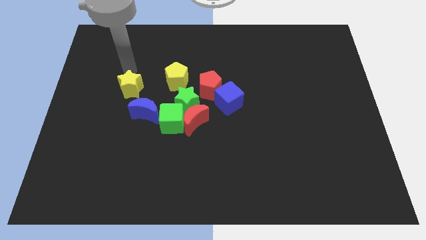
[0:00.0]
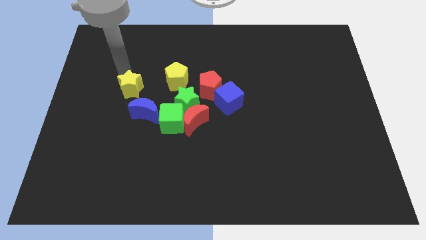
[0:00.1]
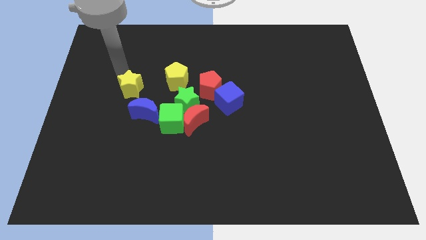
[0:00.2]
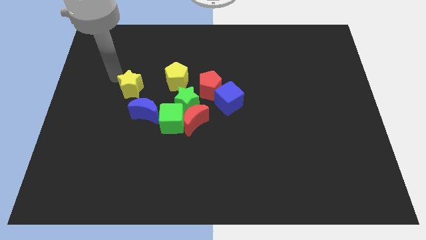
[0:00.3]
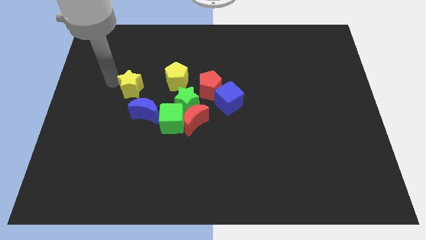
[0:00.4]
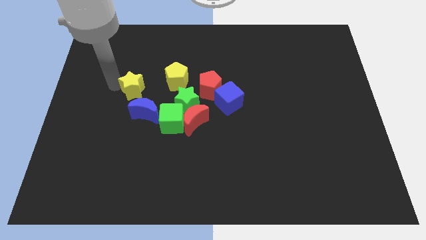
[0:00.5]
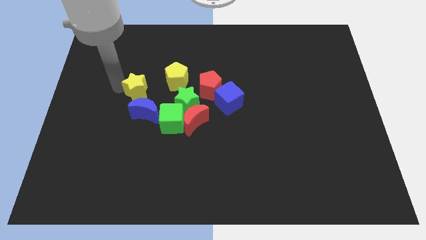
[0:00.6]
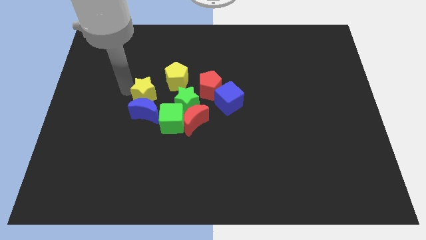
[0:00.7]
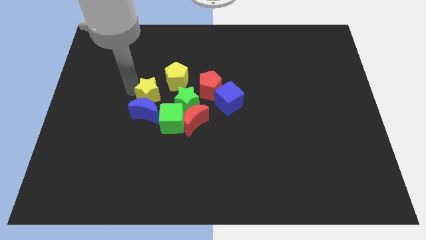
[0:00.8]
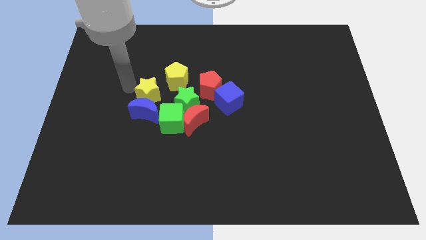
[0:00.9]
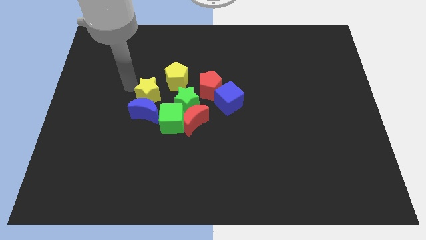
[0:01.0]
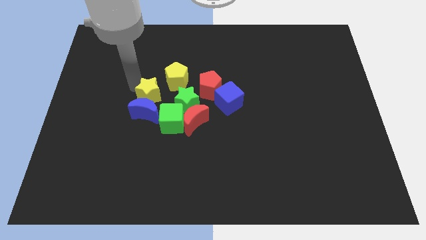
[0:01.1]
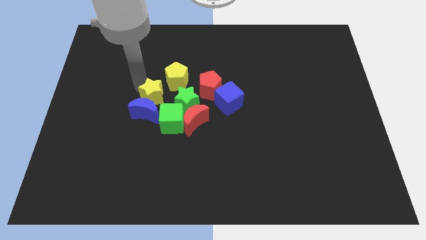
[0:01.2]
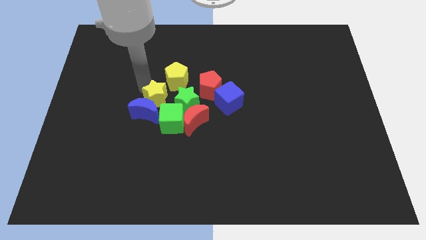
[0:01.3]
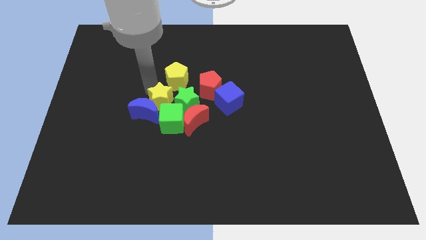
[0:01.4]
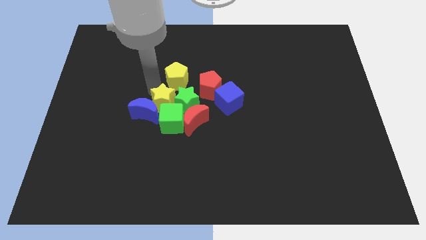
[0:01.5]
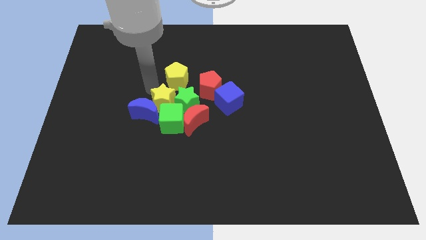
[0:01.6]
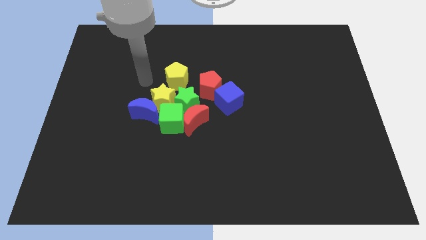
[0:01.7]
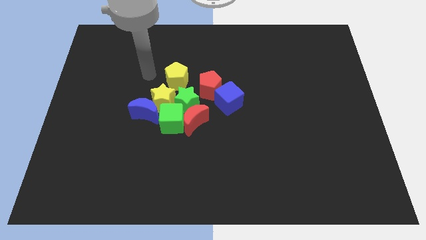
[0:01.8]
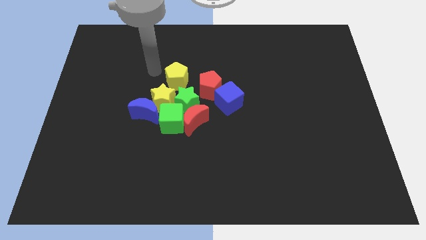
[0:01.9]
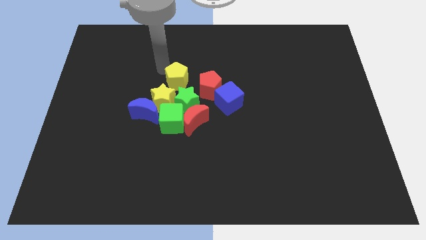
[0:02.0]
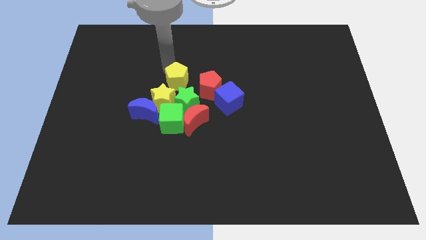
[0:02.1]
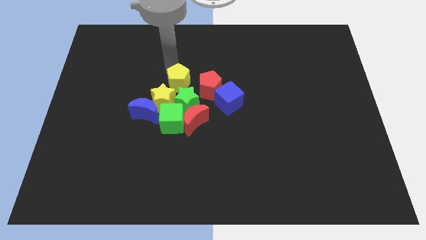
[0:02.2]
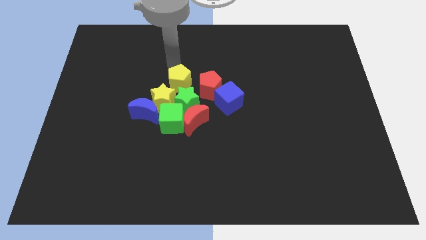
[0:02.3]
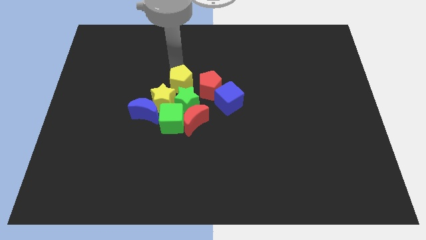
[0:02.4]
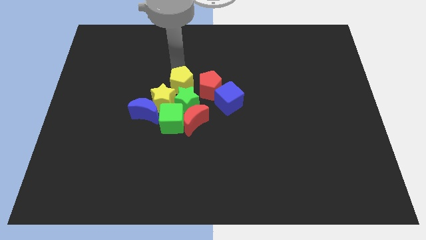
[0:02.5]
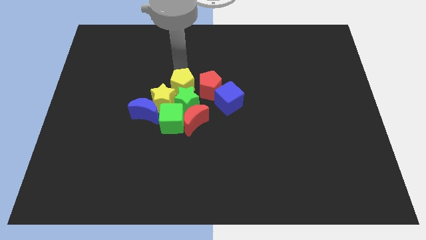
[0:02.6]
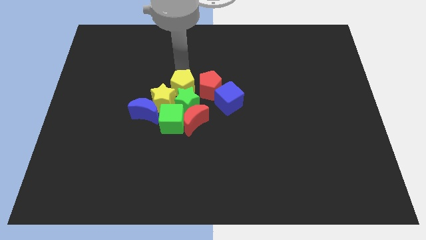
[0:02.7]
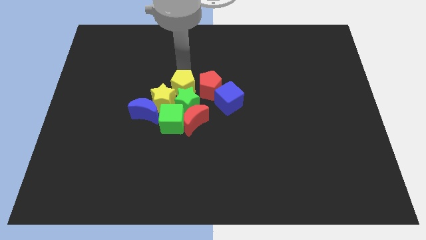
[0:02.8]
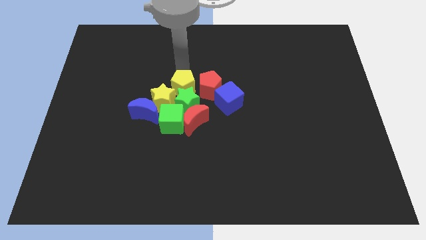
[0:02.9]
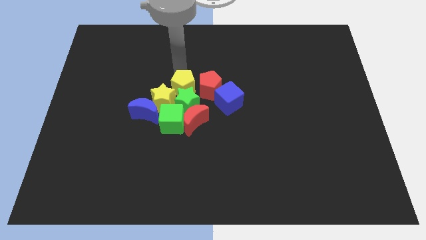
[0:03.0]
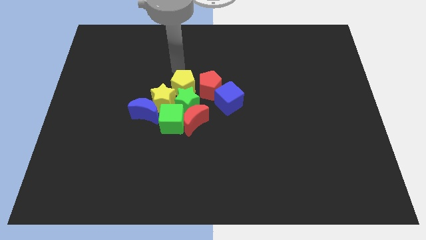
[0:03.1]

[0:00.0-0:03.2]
push the yellow pentagon into green star

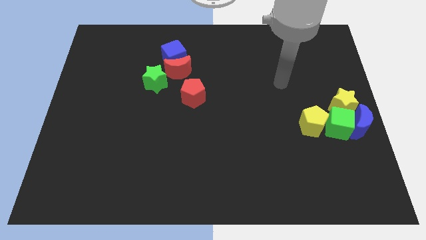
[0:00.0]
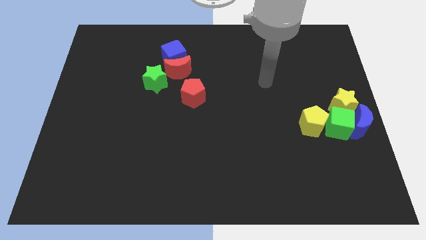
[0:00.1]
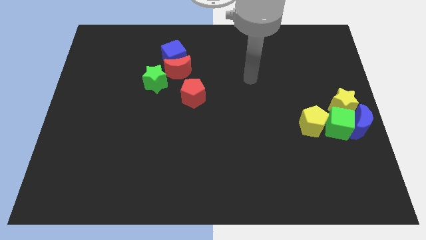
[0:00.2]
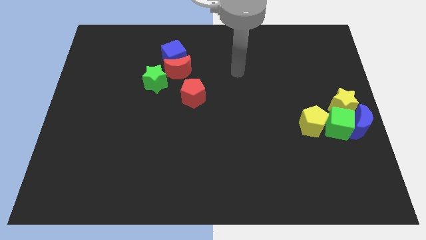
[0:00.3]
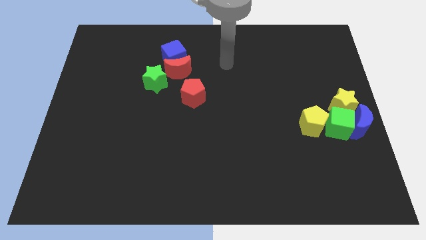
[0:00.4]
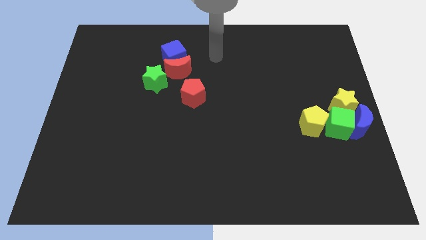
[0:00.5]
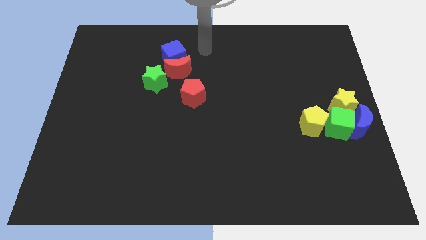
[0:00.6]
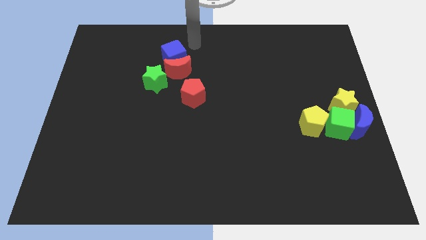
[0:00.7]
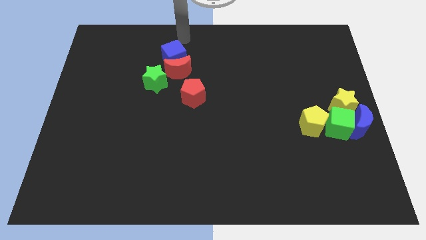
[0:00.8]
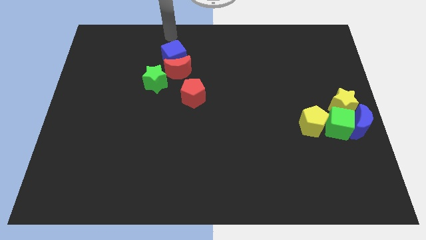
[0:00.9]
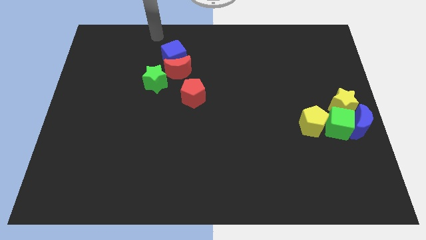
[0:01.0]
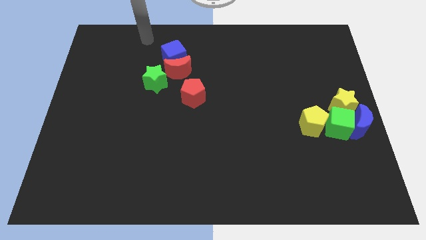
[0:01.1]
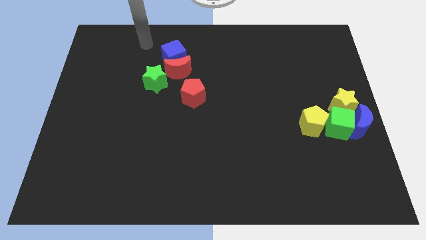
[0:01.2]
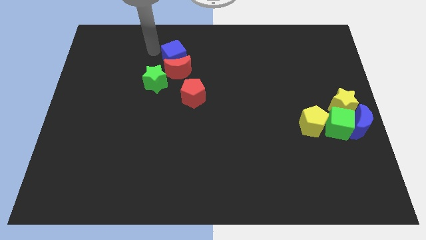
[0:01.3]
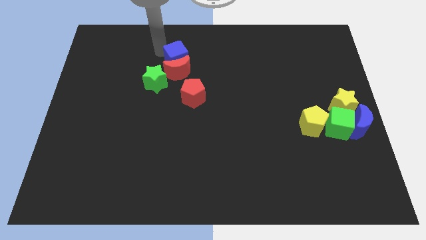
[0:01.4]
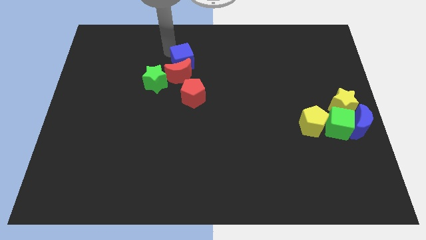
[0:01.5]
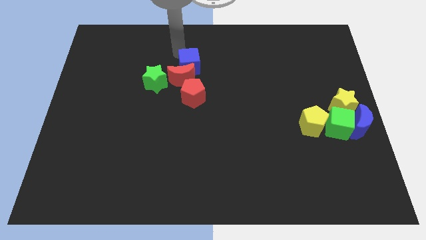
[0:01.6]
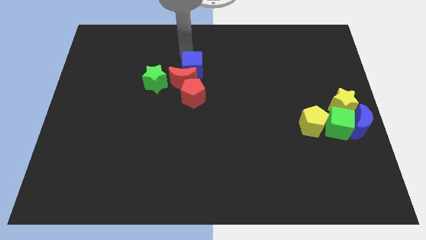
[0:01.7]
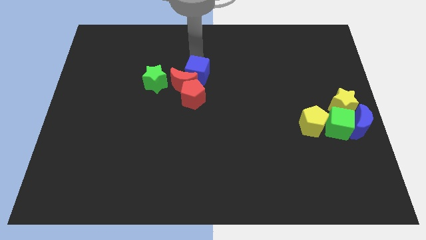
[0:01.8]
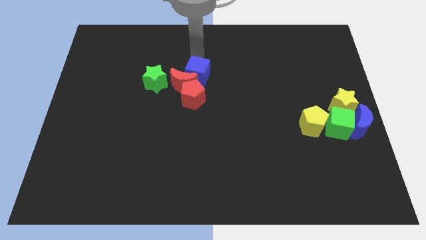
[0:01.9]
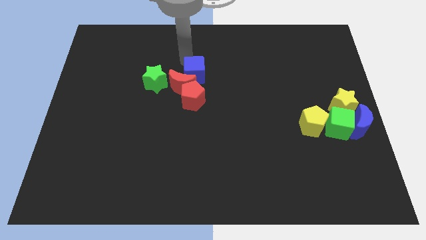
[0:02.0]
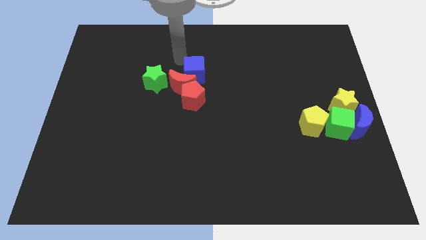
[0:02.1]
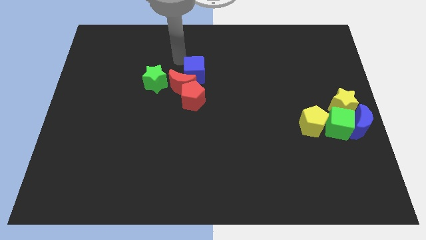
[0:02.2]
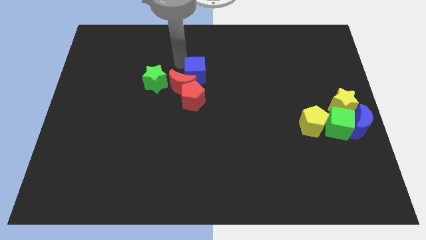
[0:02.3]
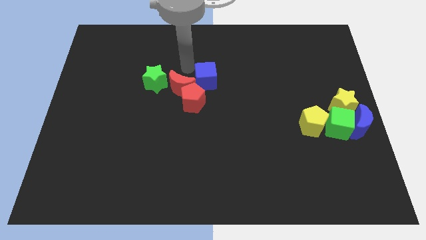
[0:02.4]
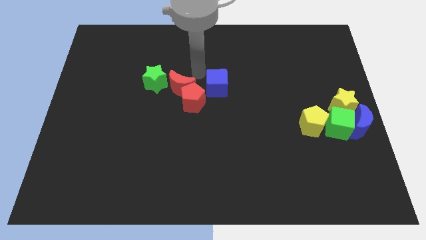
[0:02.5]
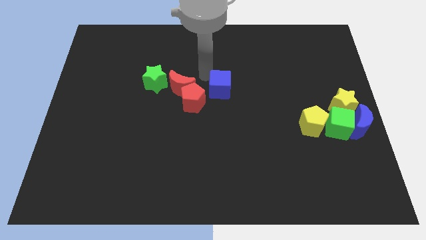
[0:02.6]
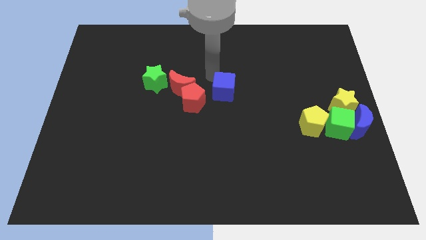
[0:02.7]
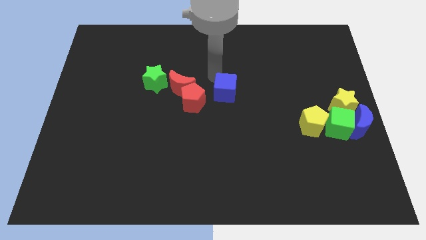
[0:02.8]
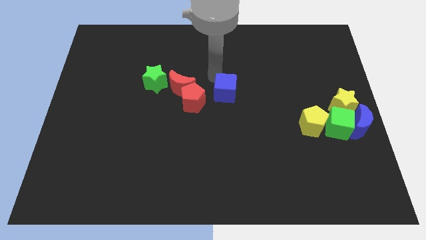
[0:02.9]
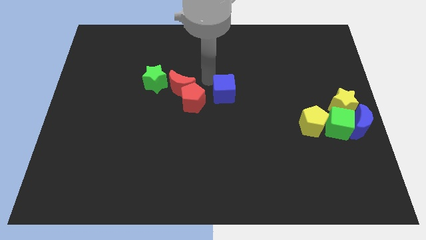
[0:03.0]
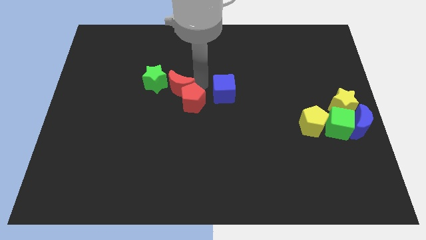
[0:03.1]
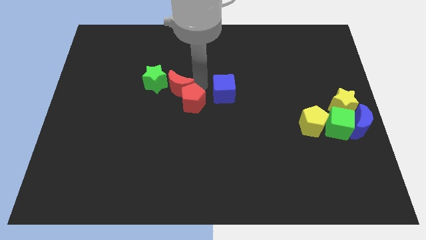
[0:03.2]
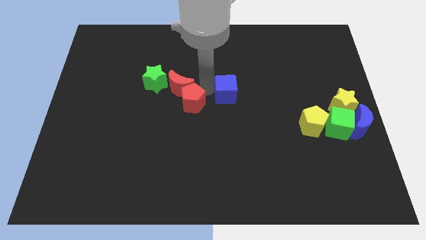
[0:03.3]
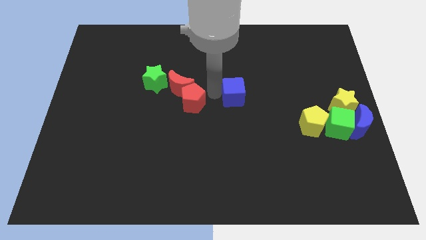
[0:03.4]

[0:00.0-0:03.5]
push blue cube beside red pentagon

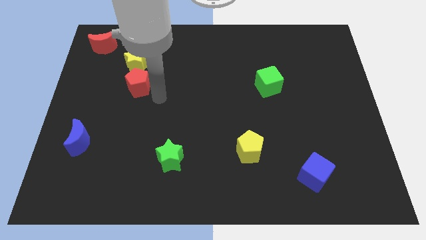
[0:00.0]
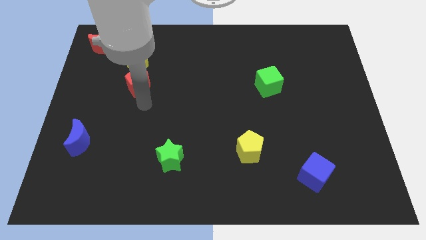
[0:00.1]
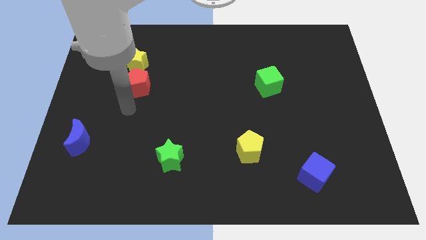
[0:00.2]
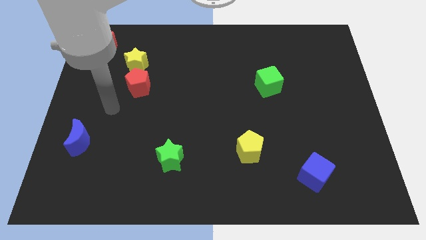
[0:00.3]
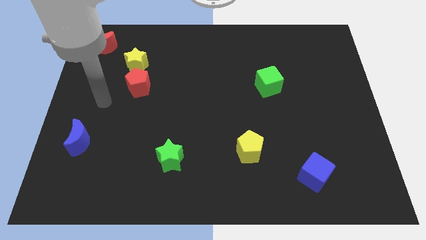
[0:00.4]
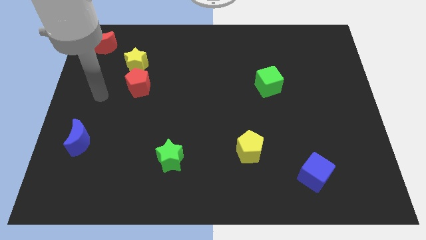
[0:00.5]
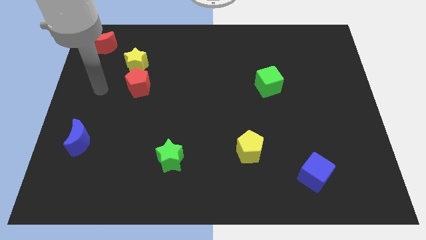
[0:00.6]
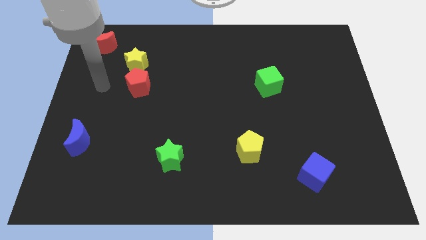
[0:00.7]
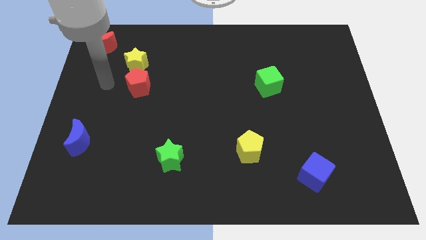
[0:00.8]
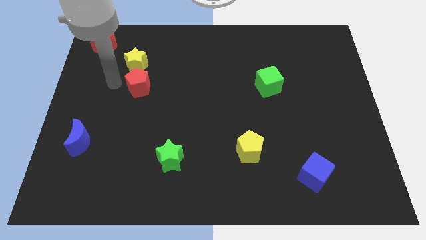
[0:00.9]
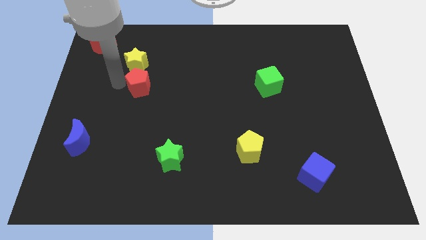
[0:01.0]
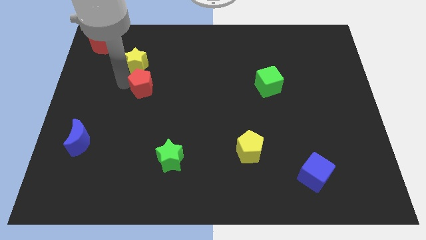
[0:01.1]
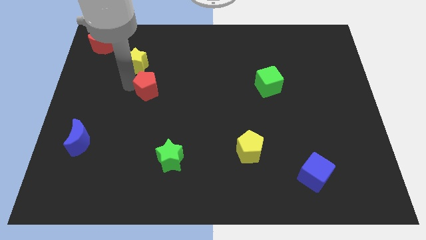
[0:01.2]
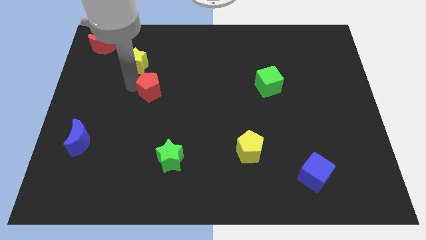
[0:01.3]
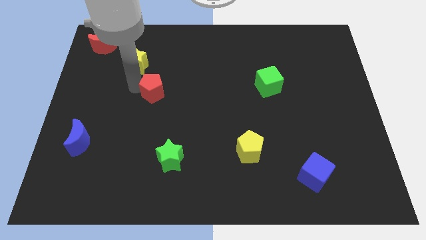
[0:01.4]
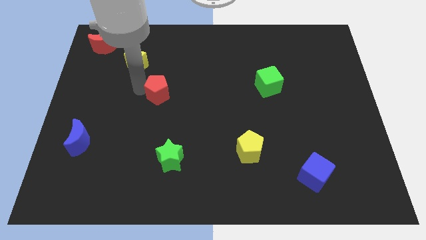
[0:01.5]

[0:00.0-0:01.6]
move red pentagon towards center

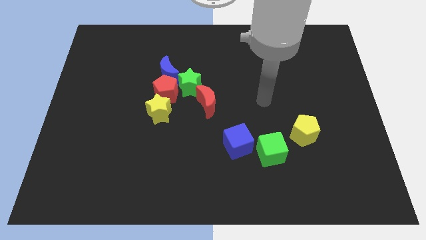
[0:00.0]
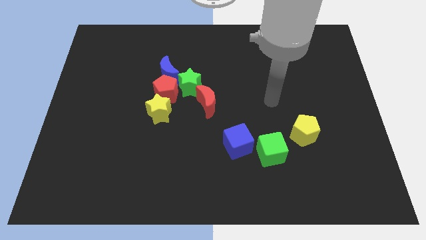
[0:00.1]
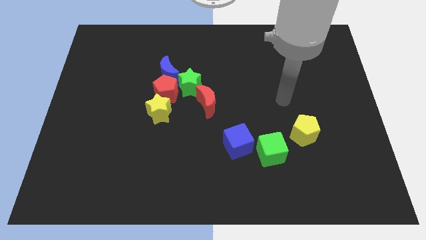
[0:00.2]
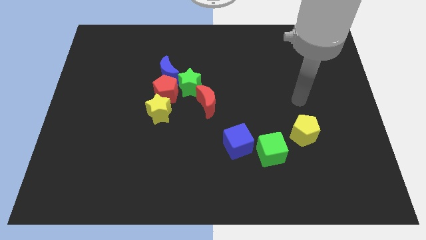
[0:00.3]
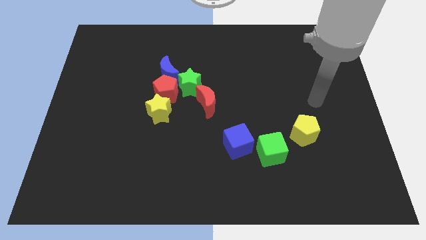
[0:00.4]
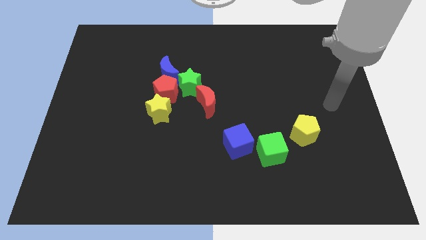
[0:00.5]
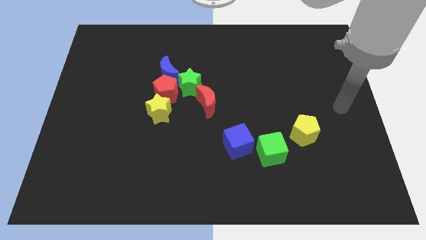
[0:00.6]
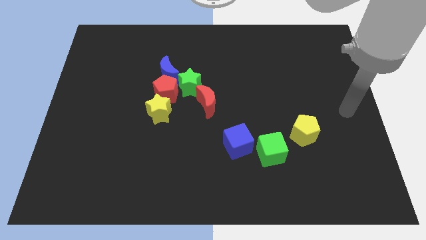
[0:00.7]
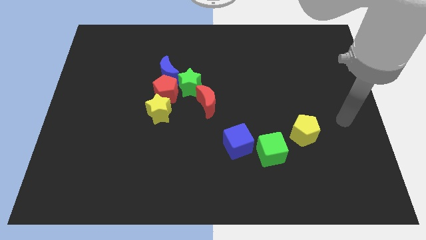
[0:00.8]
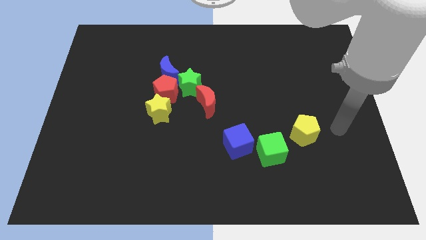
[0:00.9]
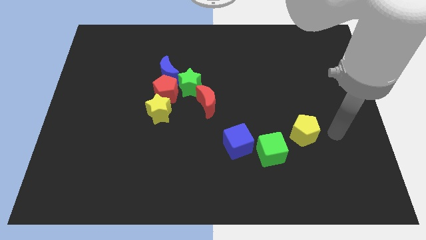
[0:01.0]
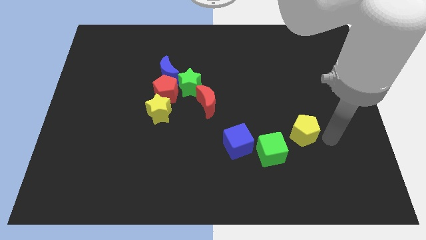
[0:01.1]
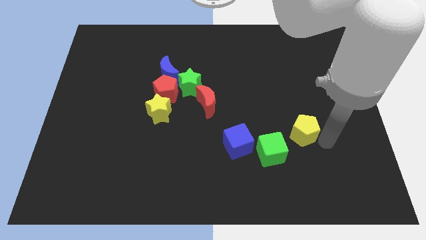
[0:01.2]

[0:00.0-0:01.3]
place your arm to the right of the yellow pentagon
